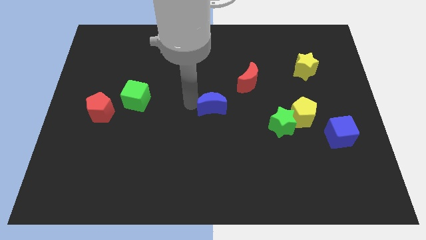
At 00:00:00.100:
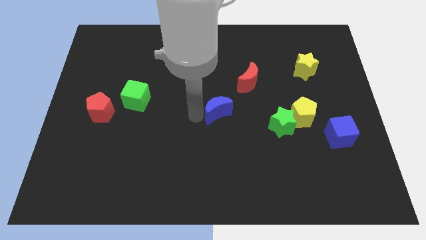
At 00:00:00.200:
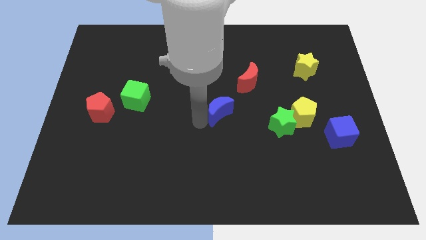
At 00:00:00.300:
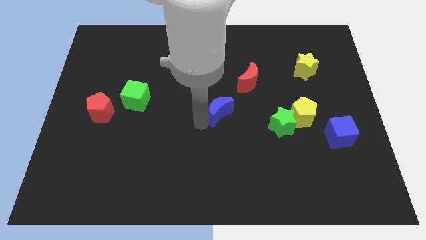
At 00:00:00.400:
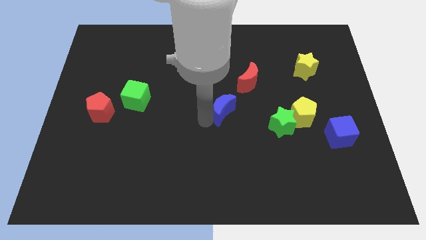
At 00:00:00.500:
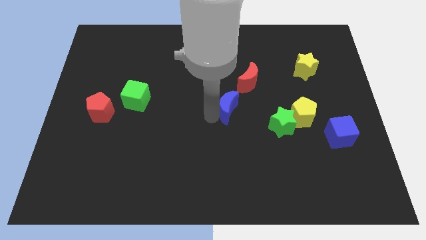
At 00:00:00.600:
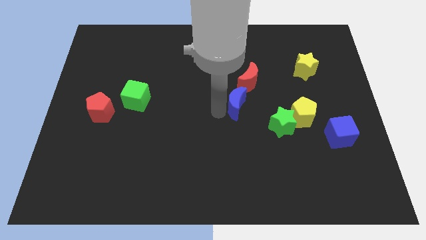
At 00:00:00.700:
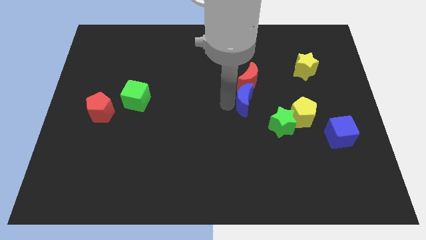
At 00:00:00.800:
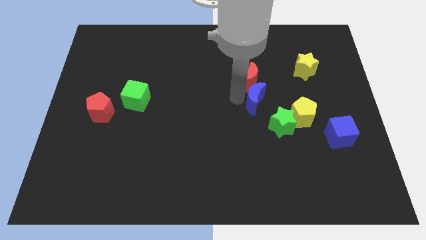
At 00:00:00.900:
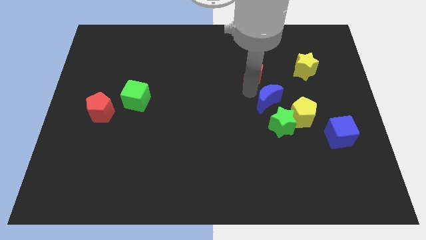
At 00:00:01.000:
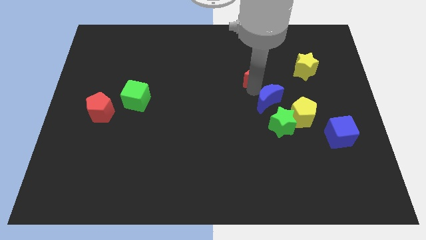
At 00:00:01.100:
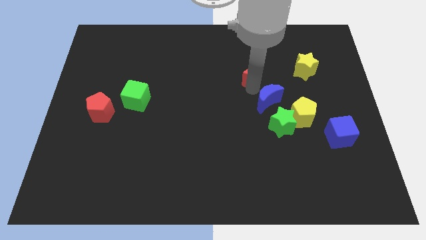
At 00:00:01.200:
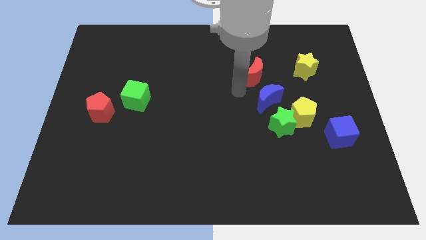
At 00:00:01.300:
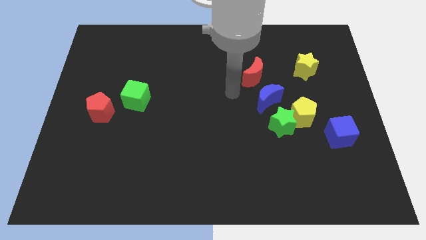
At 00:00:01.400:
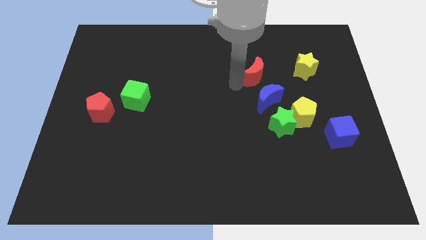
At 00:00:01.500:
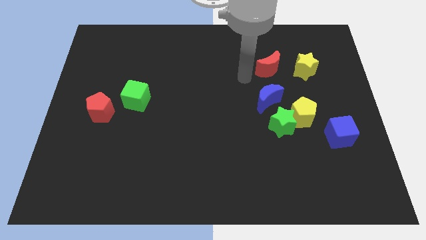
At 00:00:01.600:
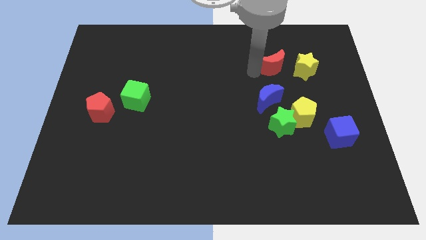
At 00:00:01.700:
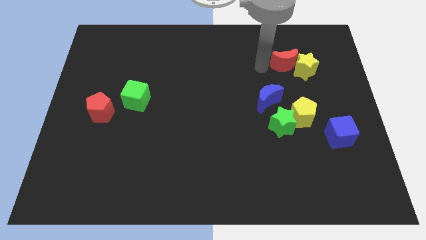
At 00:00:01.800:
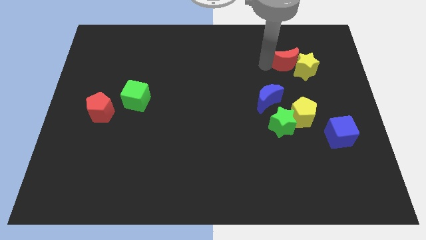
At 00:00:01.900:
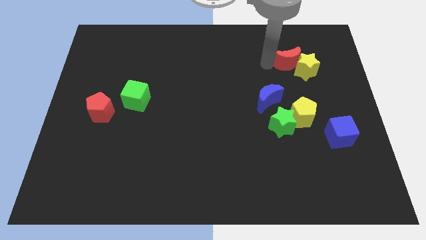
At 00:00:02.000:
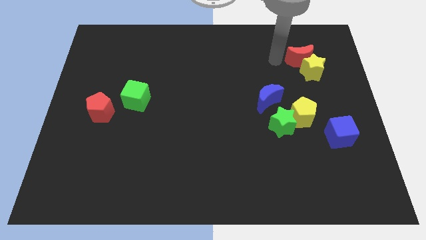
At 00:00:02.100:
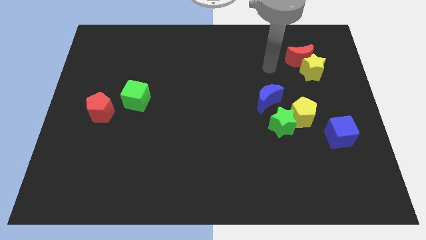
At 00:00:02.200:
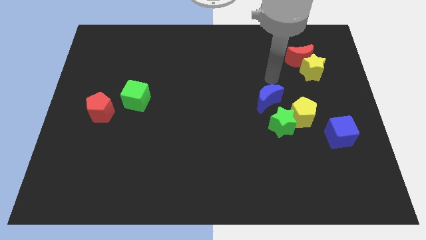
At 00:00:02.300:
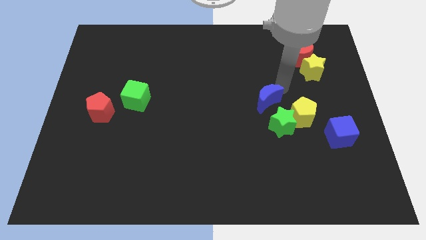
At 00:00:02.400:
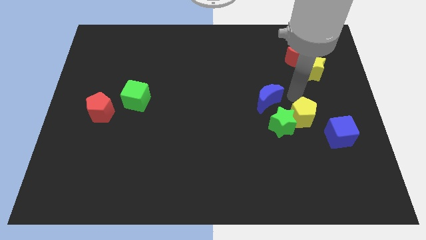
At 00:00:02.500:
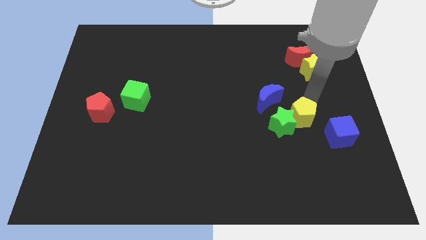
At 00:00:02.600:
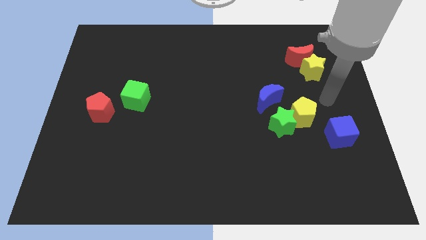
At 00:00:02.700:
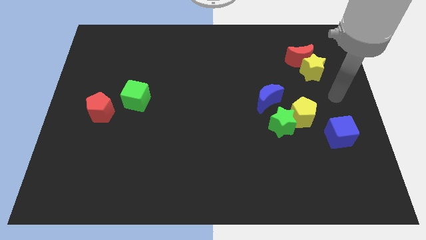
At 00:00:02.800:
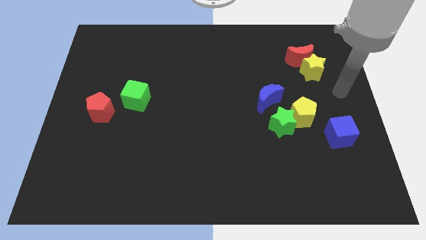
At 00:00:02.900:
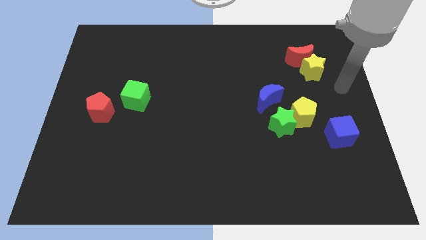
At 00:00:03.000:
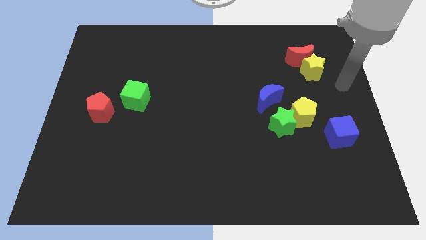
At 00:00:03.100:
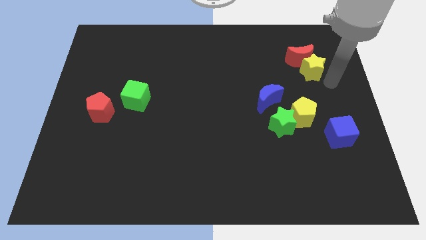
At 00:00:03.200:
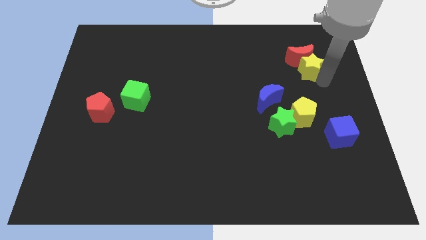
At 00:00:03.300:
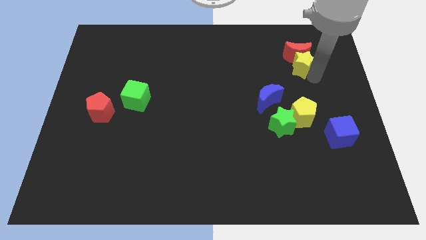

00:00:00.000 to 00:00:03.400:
move the blue moon above the green star

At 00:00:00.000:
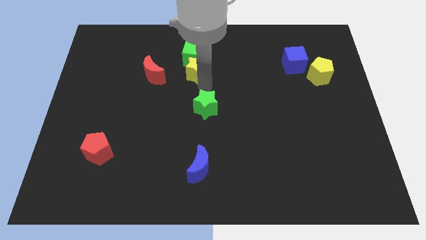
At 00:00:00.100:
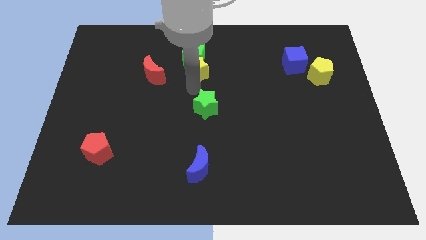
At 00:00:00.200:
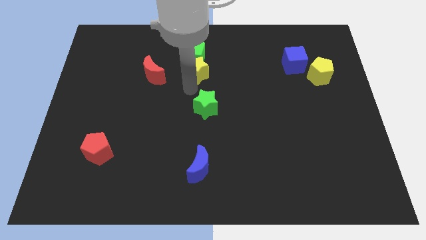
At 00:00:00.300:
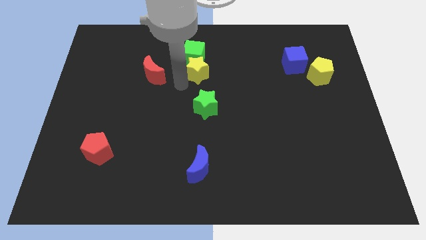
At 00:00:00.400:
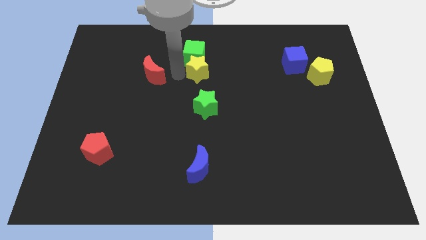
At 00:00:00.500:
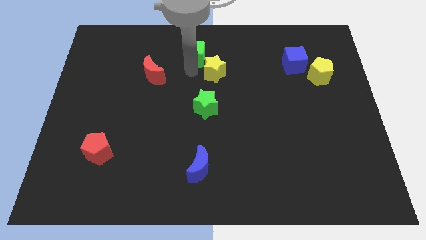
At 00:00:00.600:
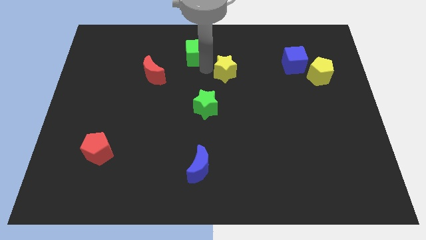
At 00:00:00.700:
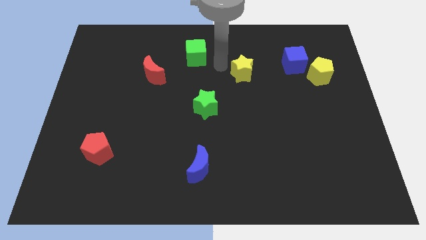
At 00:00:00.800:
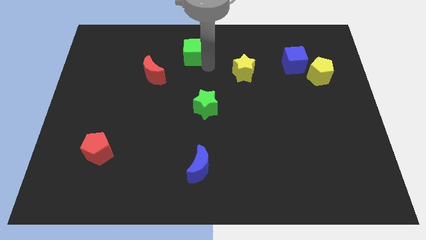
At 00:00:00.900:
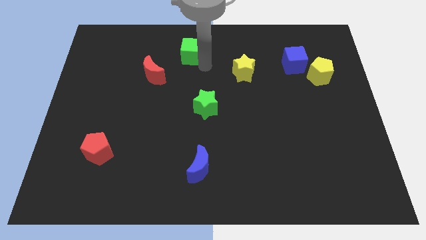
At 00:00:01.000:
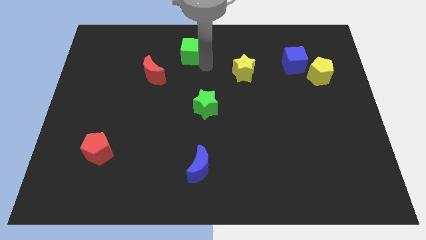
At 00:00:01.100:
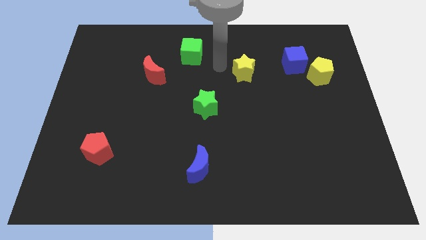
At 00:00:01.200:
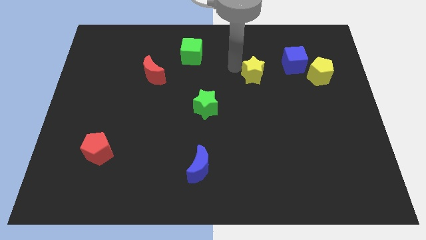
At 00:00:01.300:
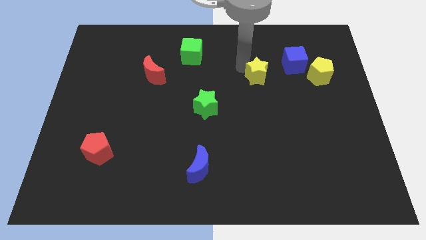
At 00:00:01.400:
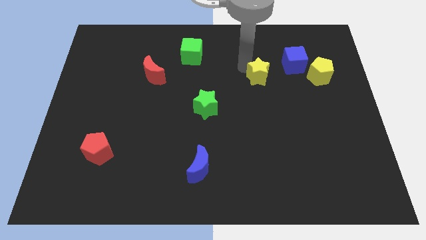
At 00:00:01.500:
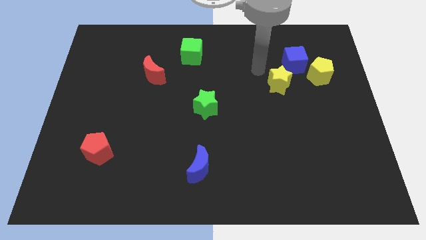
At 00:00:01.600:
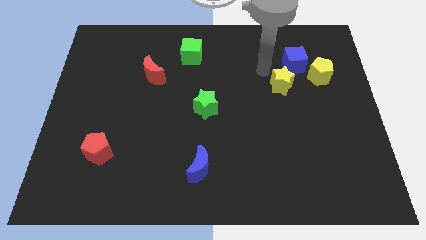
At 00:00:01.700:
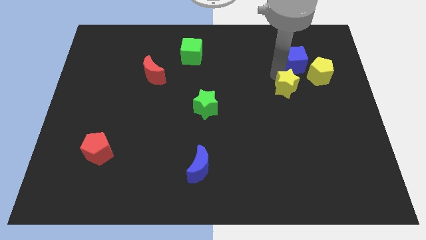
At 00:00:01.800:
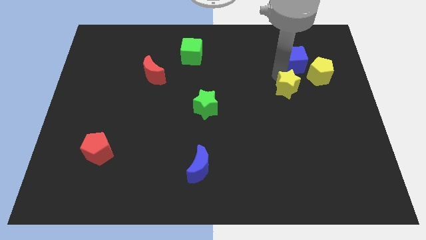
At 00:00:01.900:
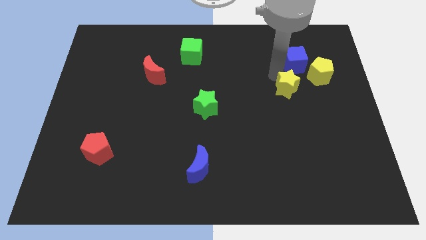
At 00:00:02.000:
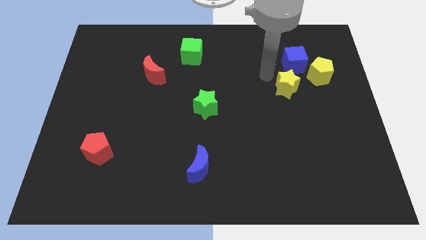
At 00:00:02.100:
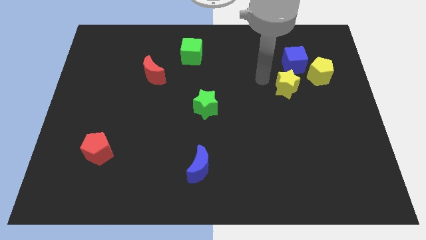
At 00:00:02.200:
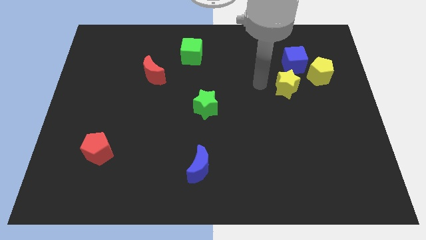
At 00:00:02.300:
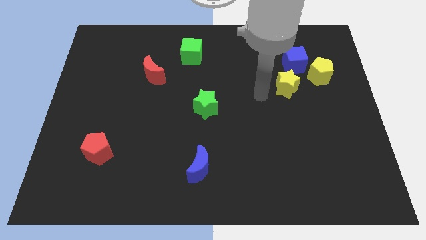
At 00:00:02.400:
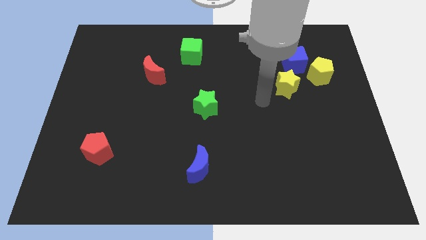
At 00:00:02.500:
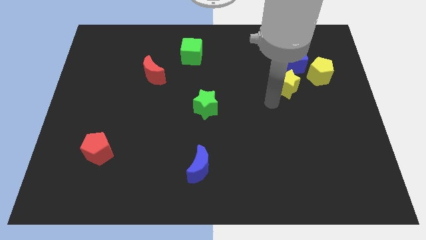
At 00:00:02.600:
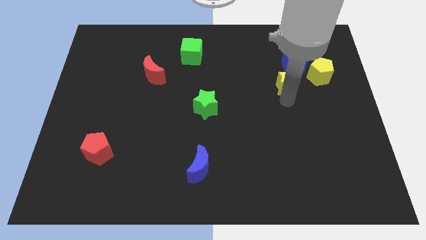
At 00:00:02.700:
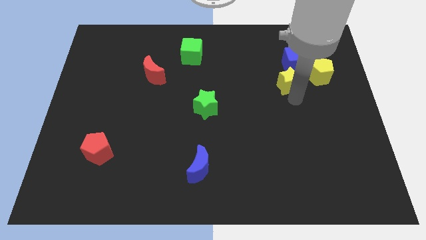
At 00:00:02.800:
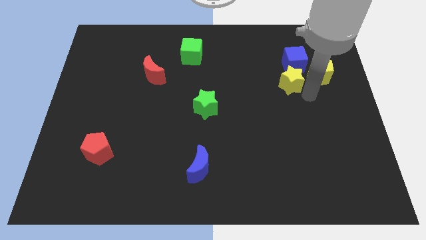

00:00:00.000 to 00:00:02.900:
place the yellow star below to the blue cube

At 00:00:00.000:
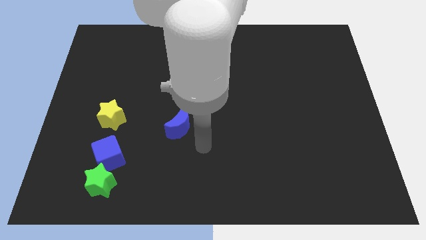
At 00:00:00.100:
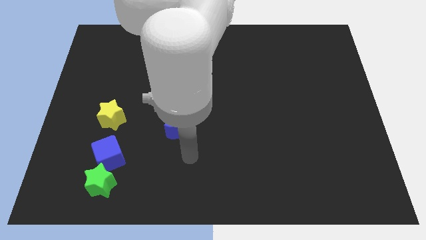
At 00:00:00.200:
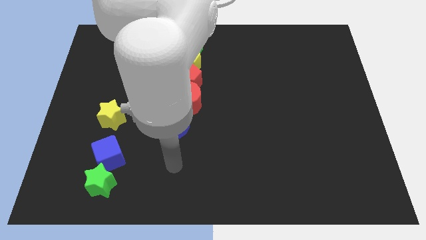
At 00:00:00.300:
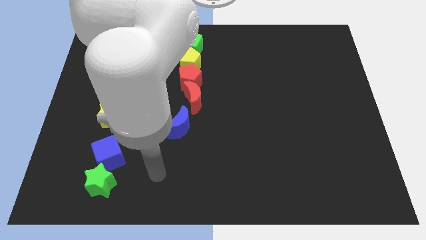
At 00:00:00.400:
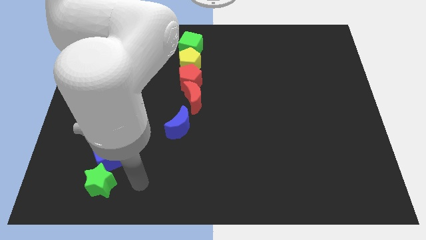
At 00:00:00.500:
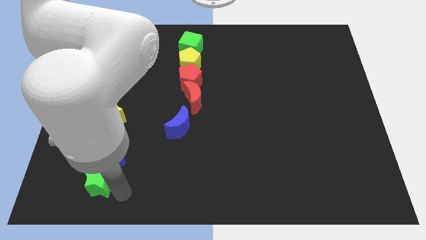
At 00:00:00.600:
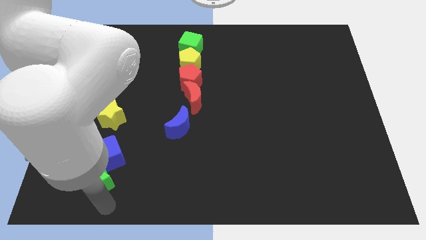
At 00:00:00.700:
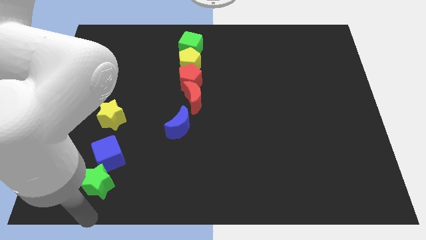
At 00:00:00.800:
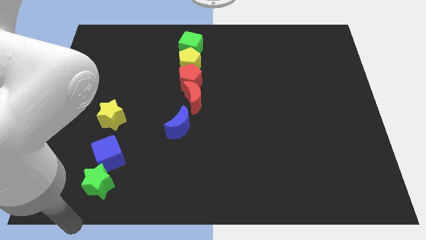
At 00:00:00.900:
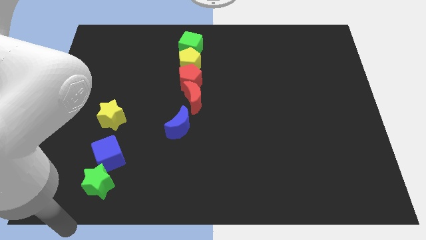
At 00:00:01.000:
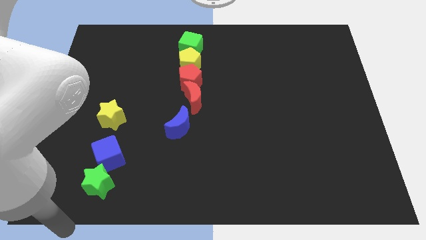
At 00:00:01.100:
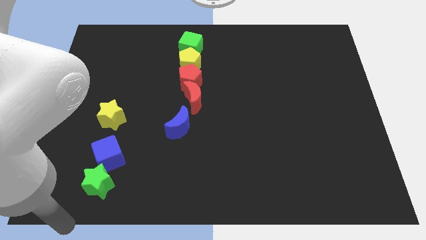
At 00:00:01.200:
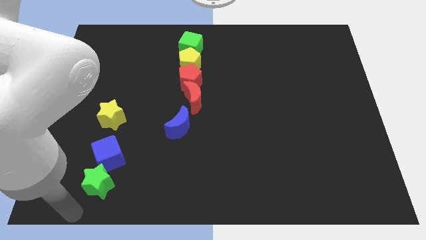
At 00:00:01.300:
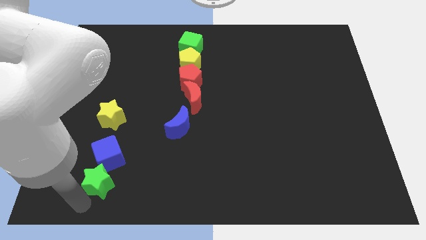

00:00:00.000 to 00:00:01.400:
place your arm to the bottom of the green star

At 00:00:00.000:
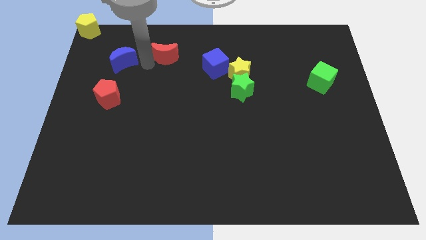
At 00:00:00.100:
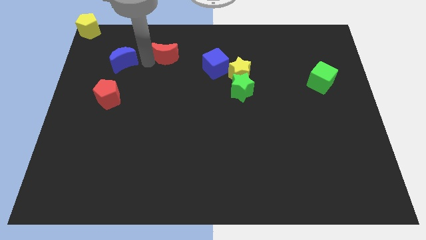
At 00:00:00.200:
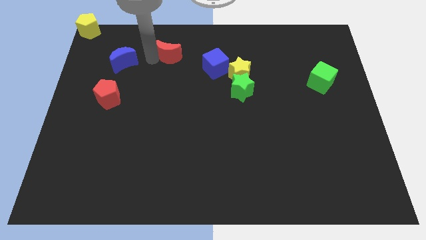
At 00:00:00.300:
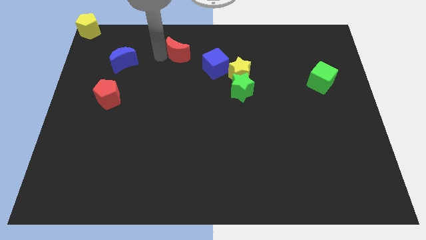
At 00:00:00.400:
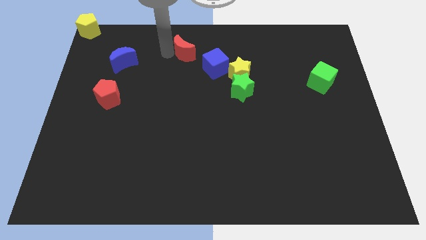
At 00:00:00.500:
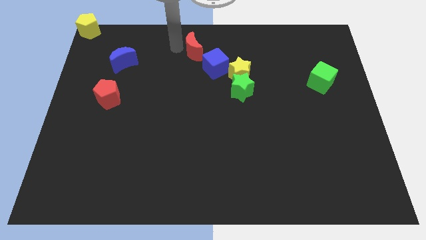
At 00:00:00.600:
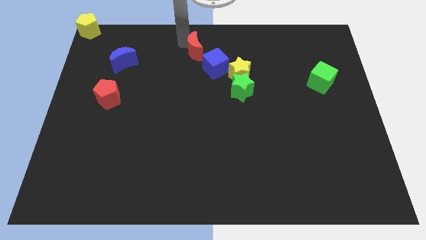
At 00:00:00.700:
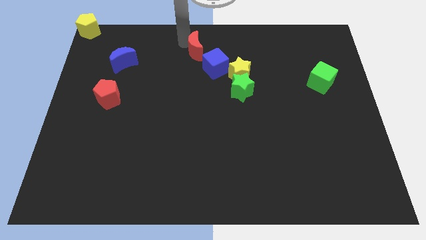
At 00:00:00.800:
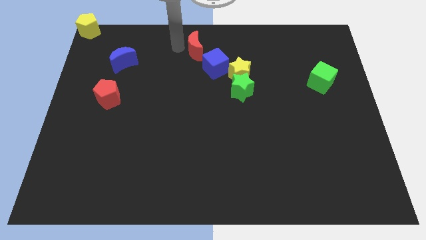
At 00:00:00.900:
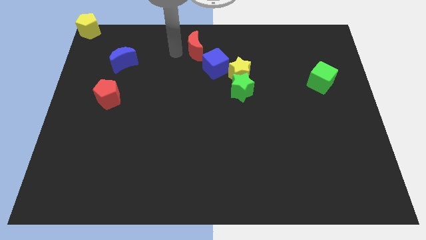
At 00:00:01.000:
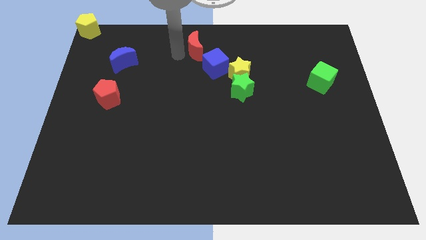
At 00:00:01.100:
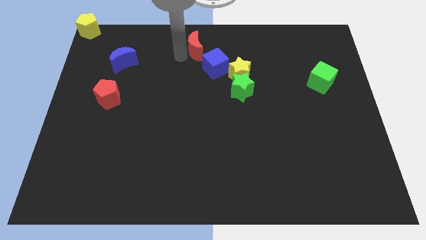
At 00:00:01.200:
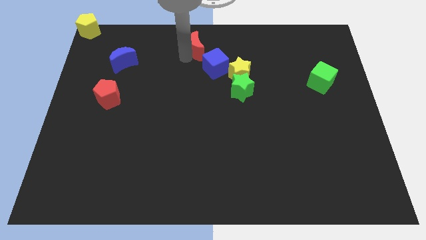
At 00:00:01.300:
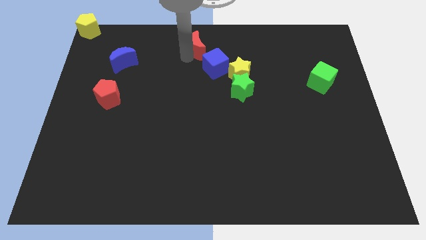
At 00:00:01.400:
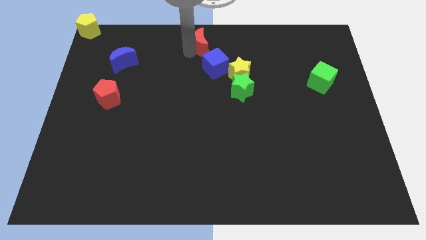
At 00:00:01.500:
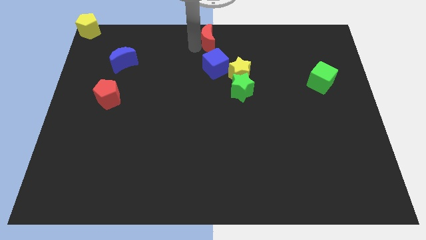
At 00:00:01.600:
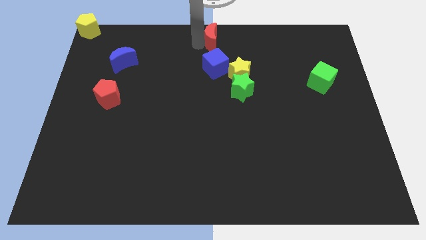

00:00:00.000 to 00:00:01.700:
place red moon to the top of blue cube
